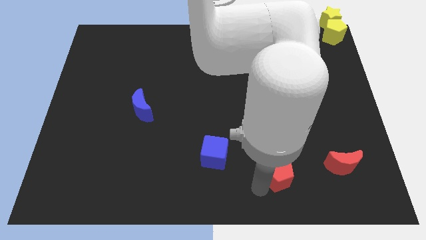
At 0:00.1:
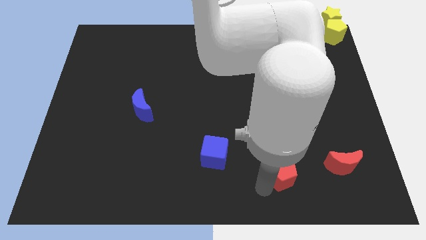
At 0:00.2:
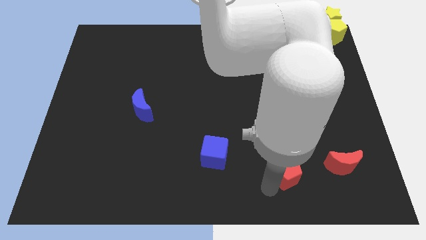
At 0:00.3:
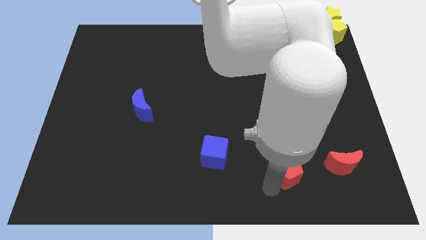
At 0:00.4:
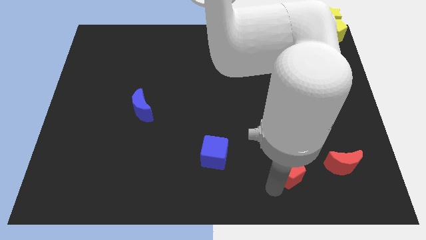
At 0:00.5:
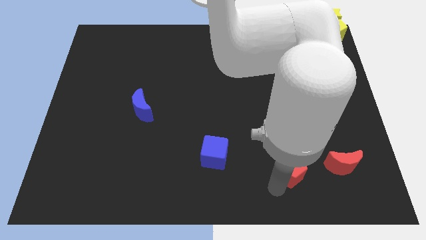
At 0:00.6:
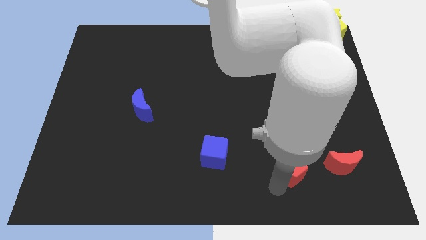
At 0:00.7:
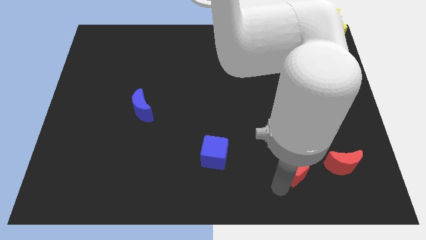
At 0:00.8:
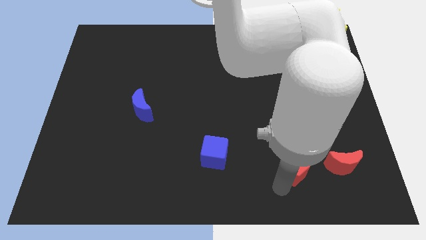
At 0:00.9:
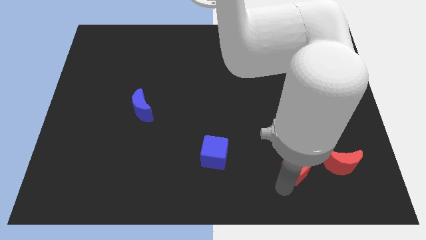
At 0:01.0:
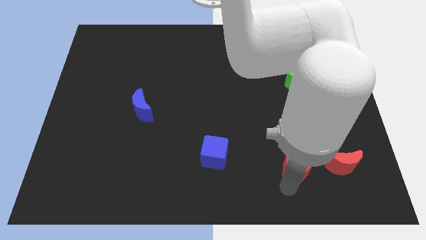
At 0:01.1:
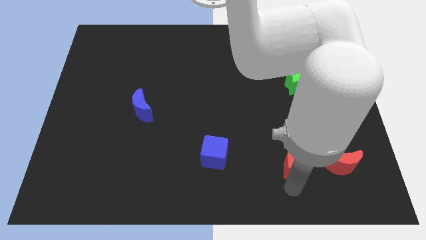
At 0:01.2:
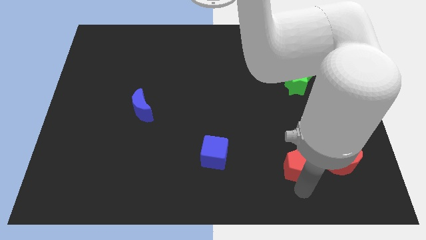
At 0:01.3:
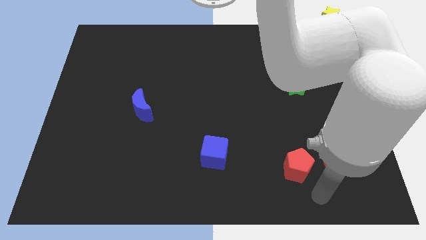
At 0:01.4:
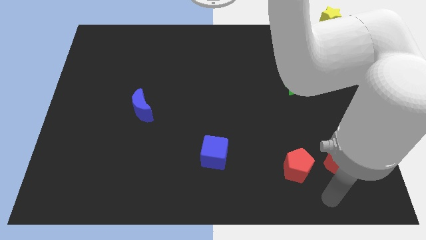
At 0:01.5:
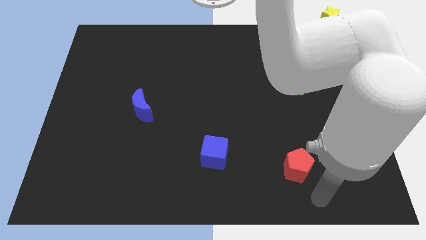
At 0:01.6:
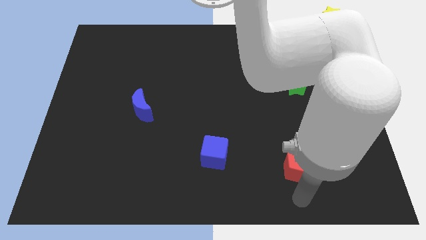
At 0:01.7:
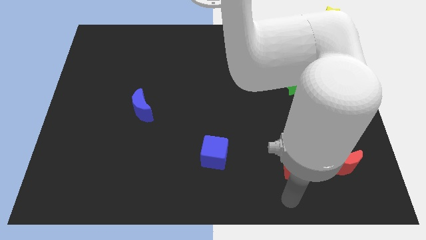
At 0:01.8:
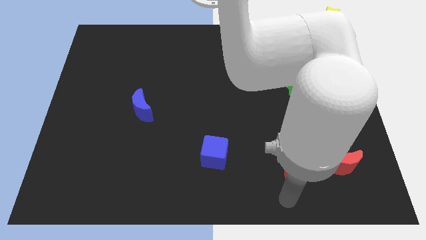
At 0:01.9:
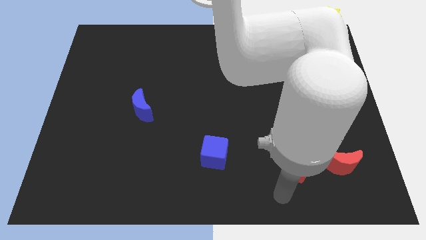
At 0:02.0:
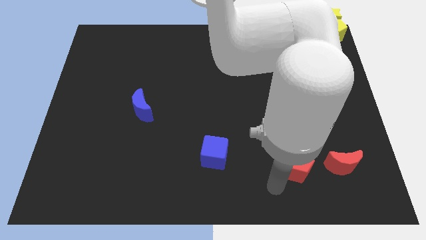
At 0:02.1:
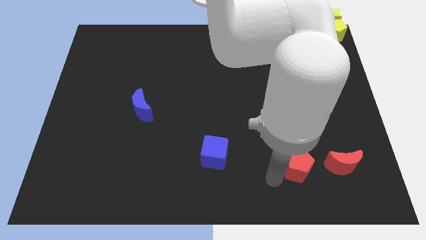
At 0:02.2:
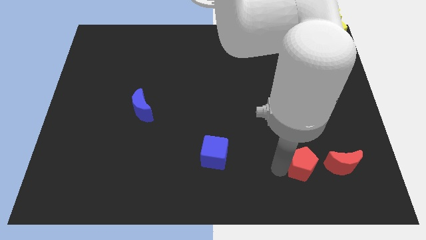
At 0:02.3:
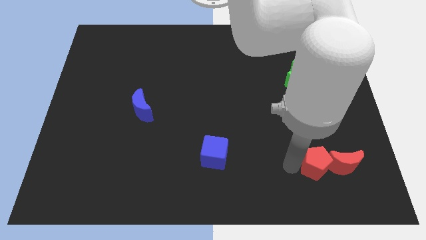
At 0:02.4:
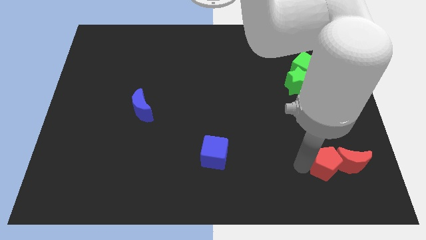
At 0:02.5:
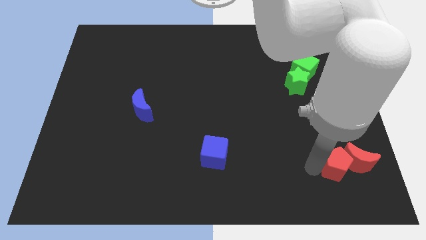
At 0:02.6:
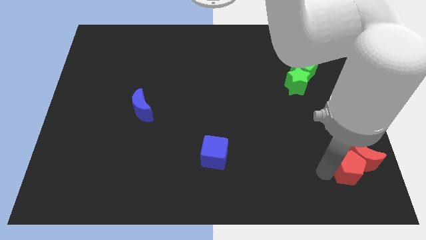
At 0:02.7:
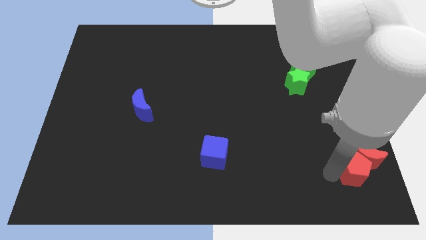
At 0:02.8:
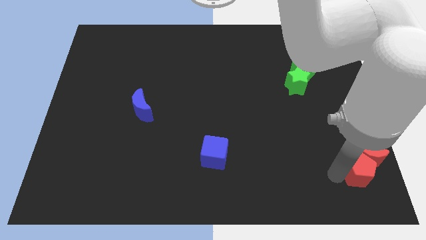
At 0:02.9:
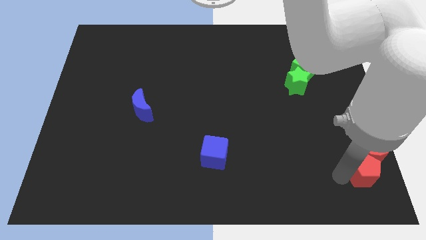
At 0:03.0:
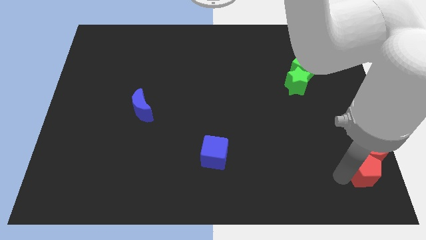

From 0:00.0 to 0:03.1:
move the red blocks to the bottom right side of the table

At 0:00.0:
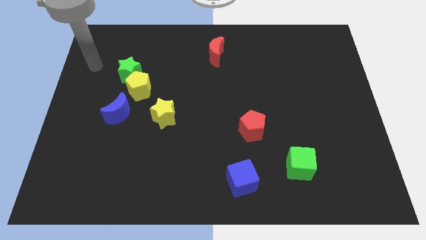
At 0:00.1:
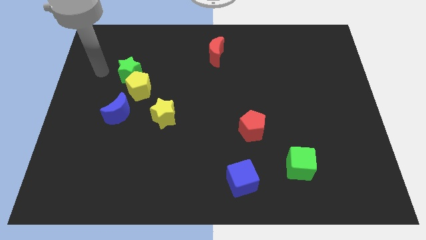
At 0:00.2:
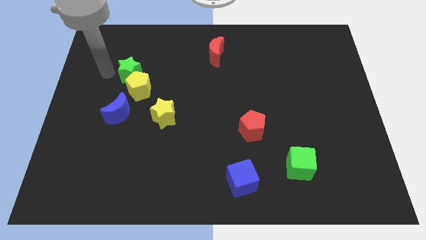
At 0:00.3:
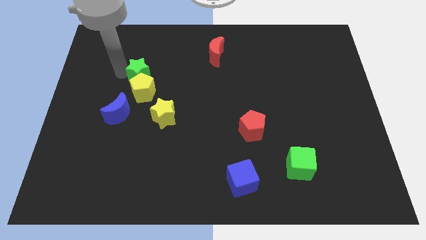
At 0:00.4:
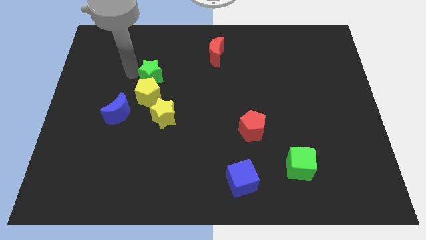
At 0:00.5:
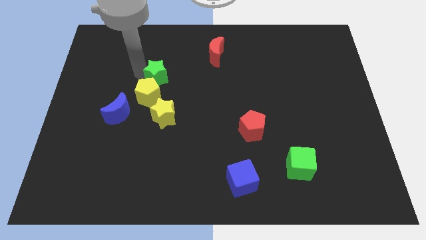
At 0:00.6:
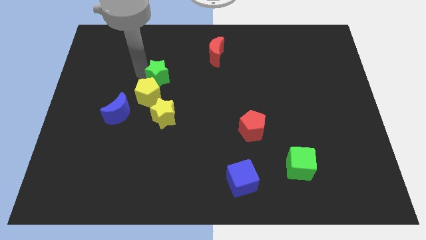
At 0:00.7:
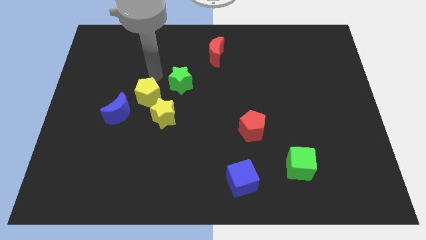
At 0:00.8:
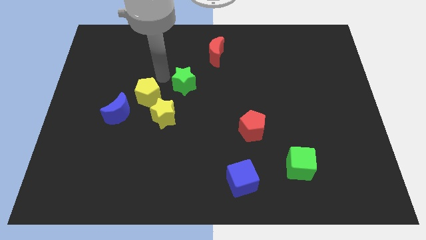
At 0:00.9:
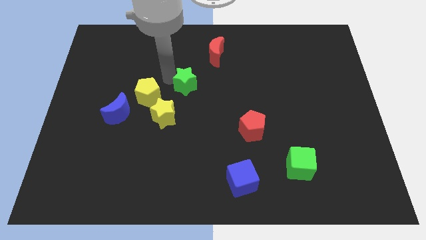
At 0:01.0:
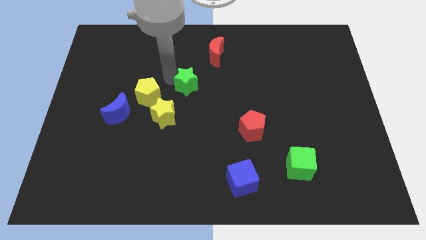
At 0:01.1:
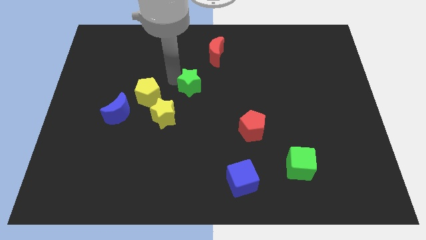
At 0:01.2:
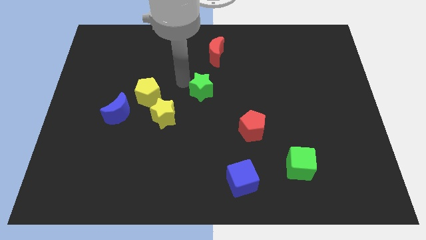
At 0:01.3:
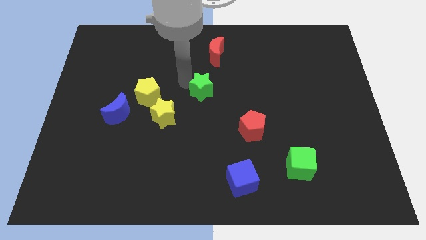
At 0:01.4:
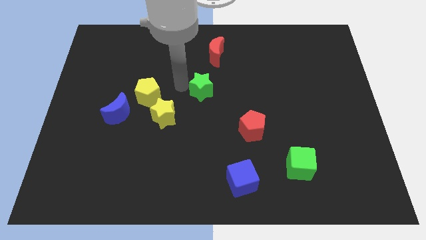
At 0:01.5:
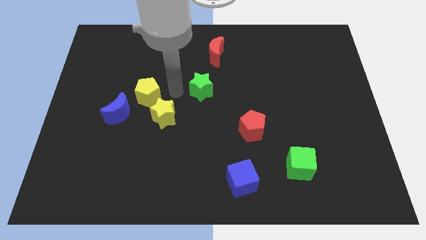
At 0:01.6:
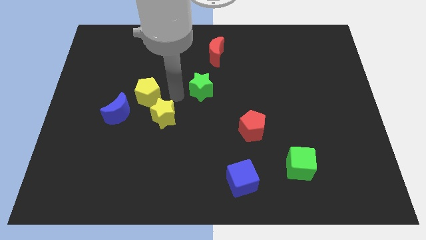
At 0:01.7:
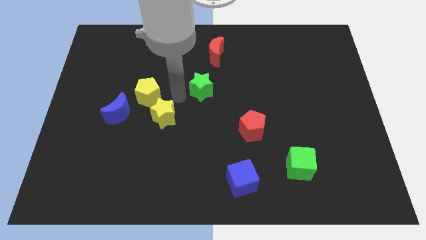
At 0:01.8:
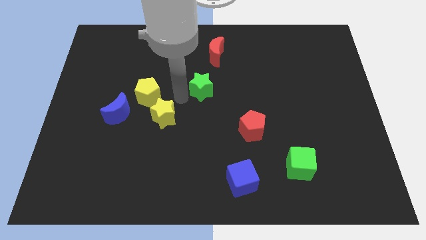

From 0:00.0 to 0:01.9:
move the green star to the bottom of the red crescent

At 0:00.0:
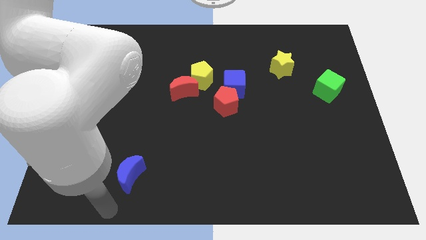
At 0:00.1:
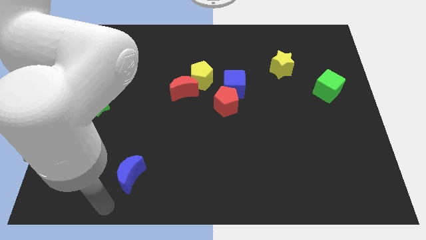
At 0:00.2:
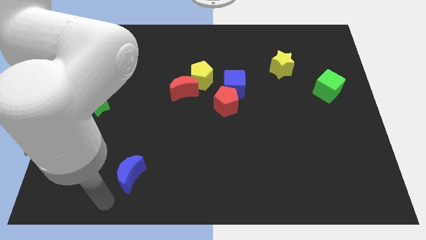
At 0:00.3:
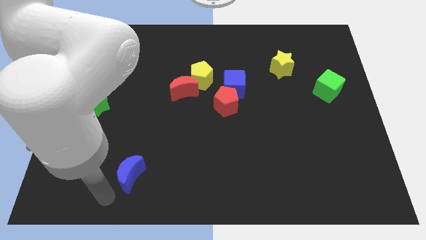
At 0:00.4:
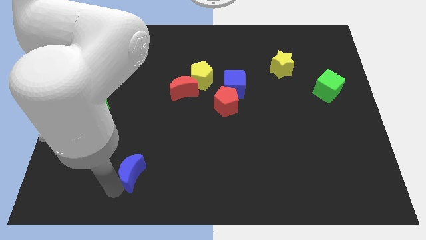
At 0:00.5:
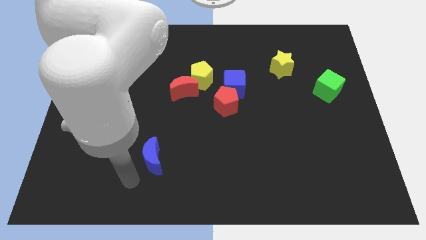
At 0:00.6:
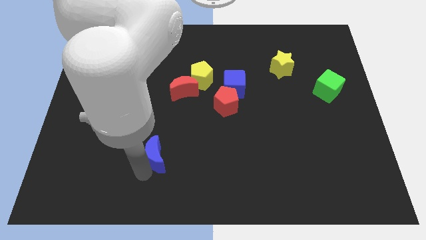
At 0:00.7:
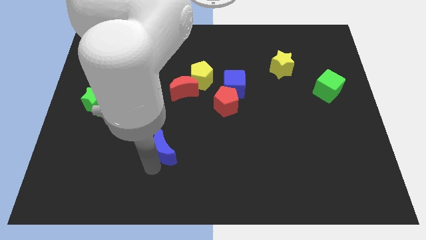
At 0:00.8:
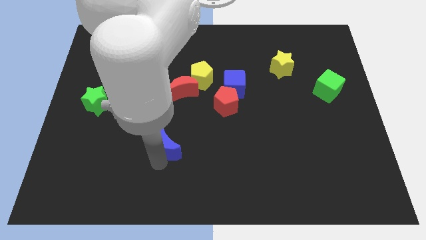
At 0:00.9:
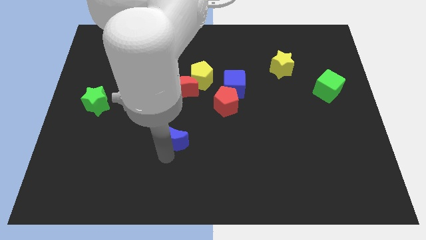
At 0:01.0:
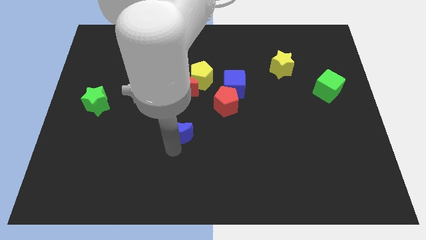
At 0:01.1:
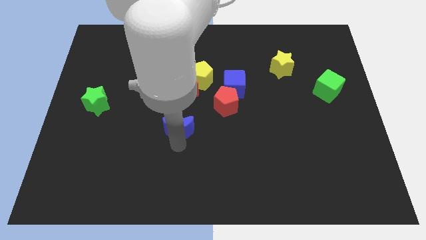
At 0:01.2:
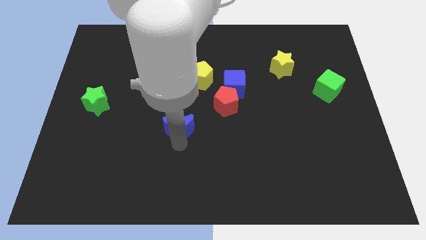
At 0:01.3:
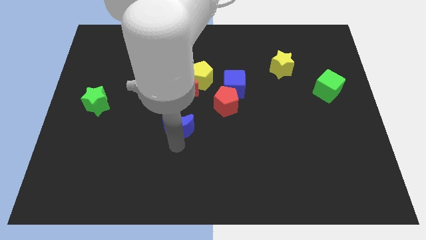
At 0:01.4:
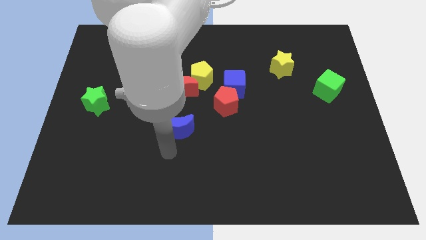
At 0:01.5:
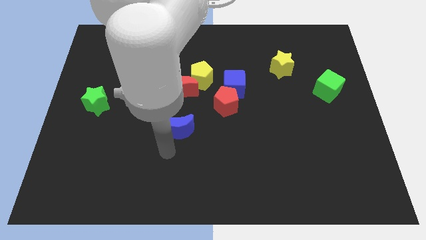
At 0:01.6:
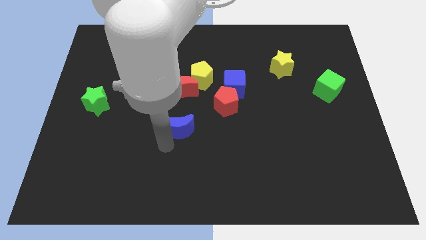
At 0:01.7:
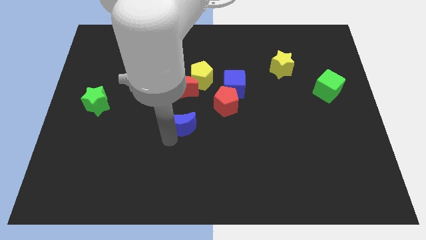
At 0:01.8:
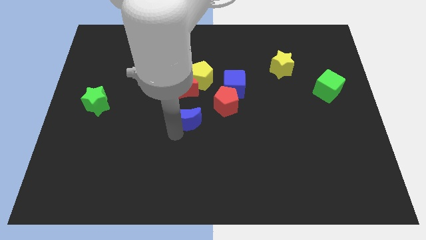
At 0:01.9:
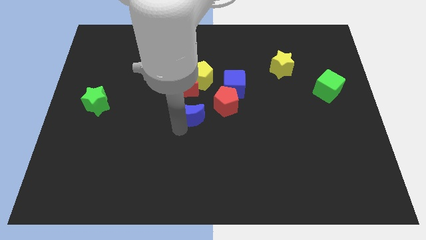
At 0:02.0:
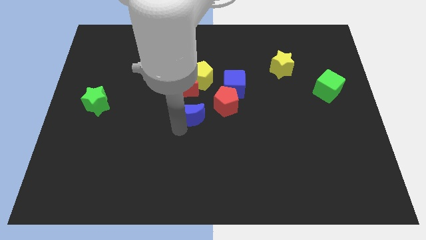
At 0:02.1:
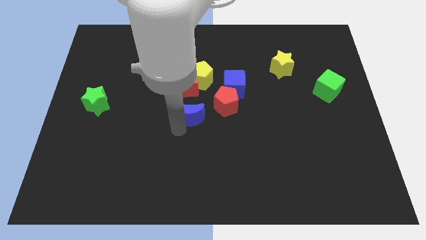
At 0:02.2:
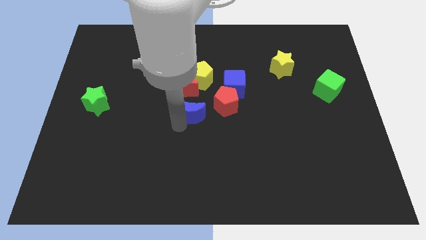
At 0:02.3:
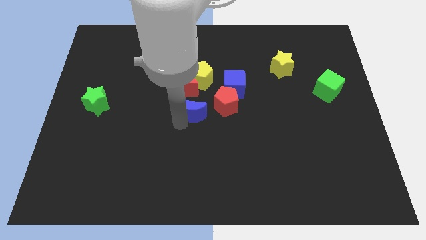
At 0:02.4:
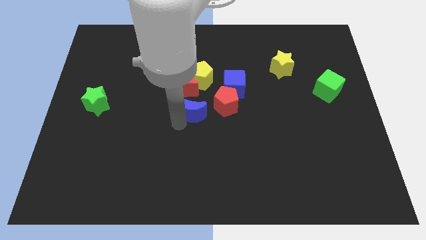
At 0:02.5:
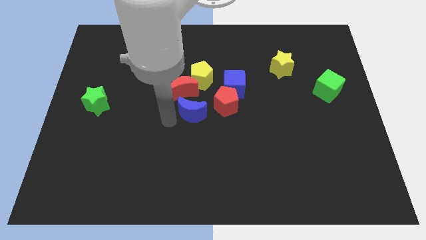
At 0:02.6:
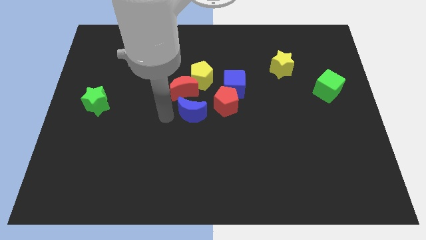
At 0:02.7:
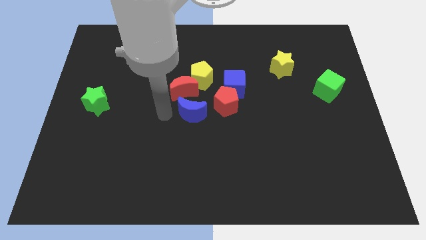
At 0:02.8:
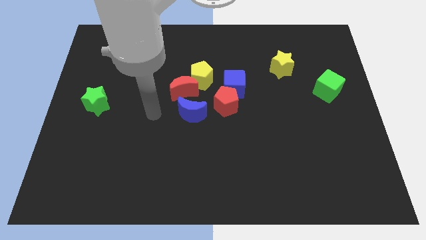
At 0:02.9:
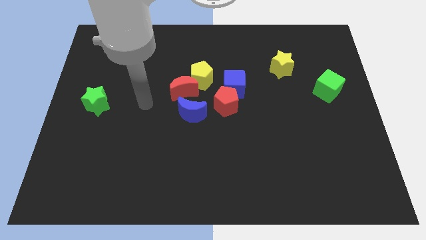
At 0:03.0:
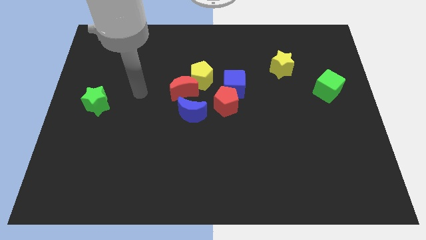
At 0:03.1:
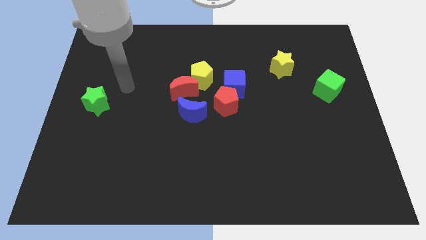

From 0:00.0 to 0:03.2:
place the blue moon left to the red pentagon

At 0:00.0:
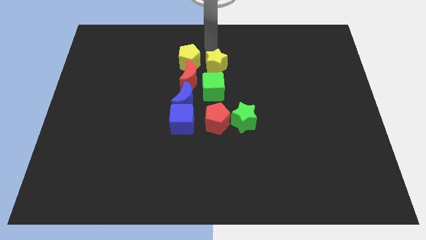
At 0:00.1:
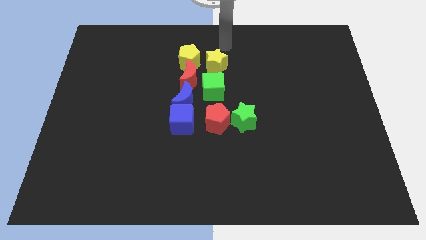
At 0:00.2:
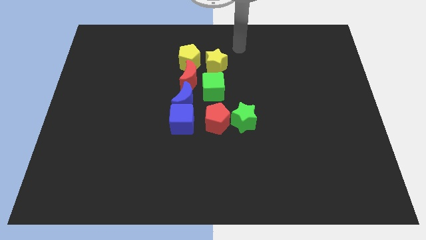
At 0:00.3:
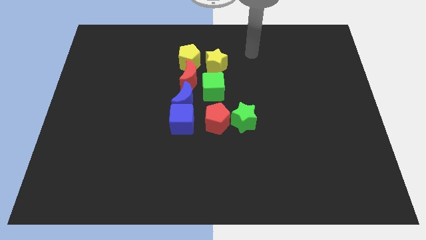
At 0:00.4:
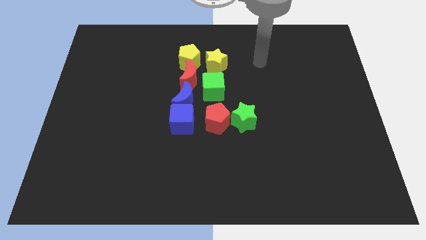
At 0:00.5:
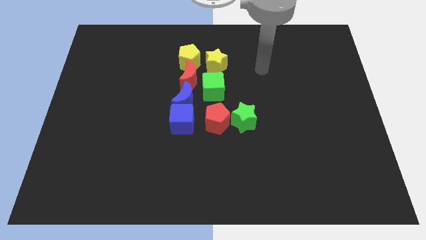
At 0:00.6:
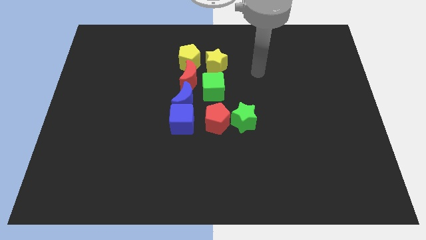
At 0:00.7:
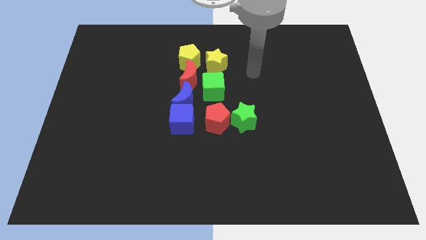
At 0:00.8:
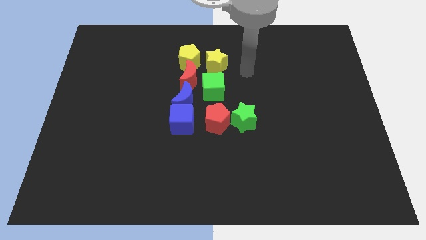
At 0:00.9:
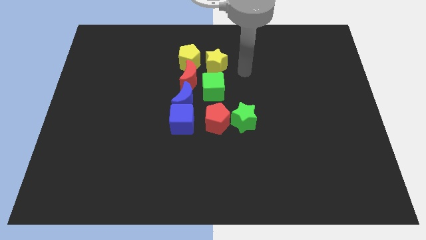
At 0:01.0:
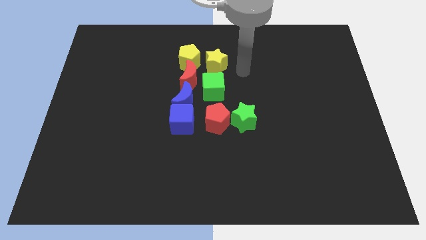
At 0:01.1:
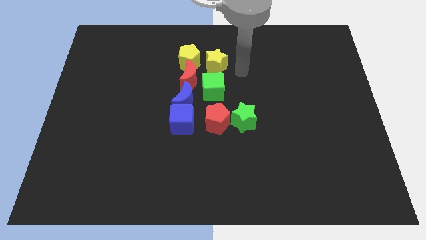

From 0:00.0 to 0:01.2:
go away from the yellow star
